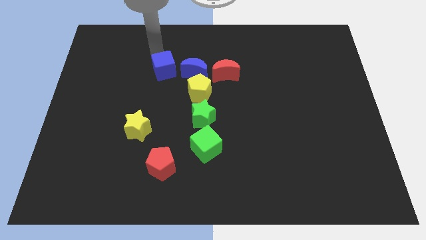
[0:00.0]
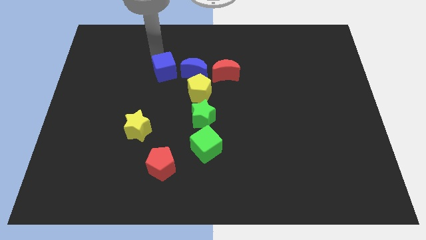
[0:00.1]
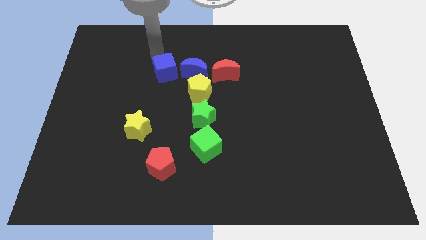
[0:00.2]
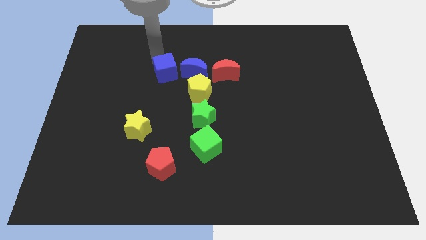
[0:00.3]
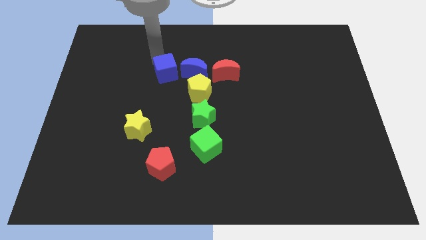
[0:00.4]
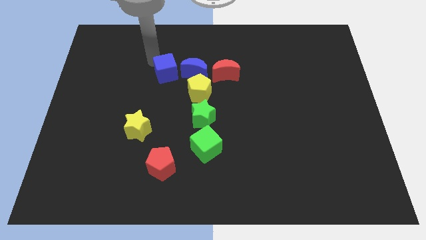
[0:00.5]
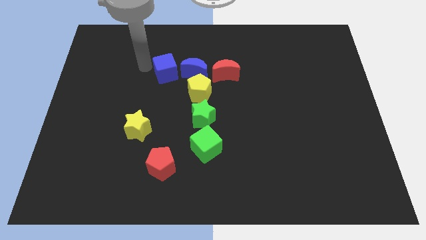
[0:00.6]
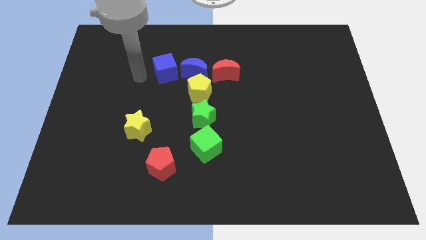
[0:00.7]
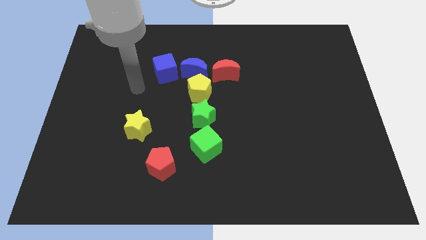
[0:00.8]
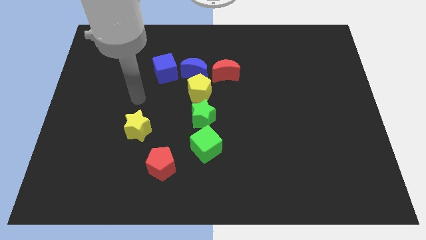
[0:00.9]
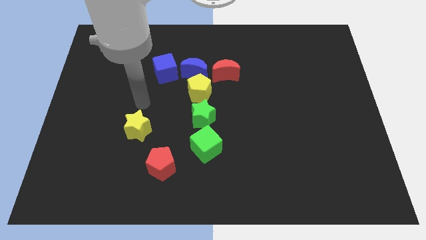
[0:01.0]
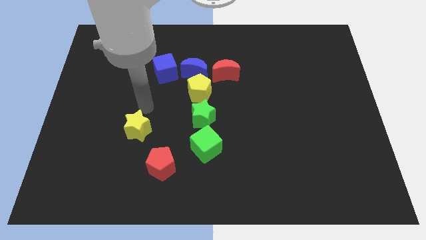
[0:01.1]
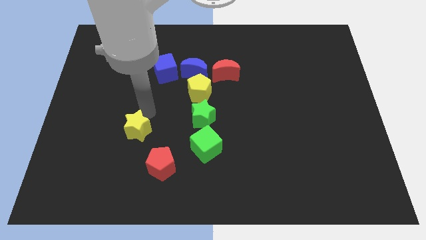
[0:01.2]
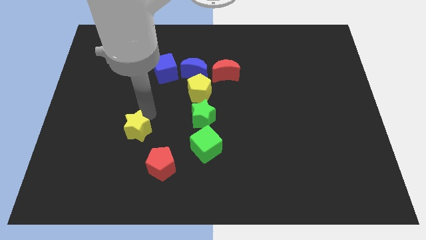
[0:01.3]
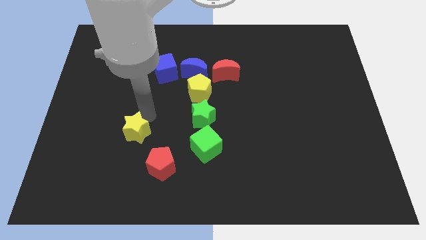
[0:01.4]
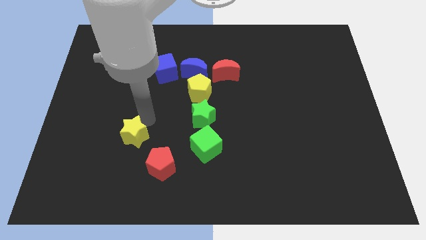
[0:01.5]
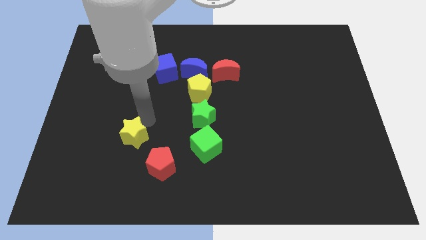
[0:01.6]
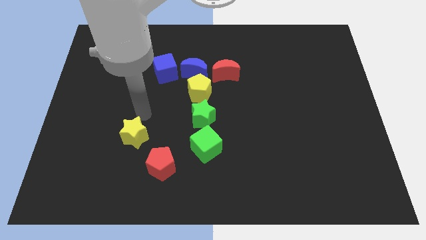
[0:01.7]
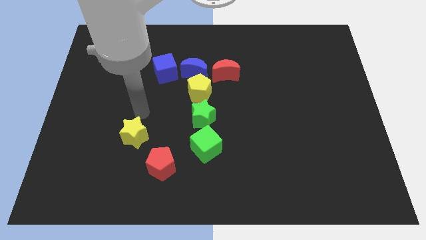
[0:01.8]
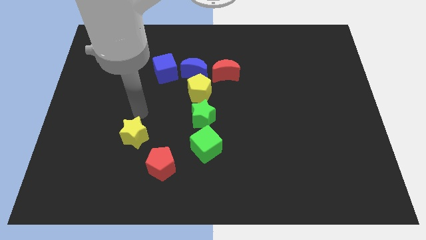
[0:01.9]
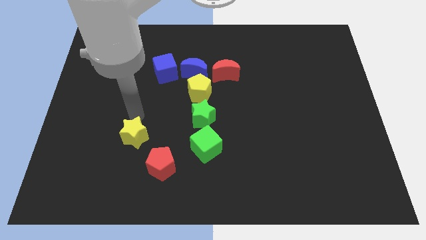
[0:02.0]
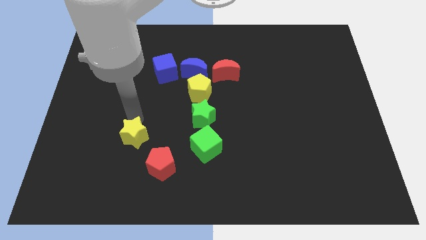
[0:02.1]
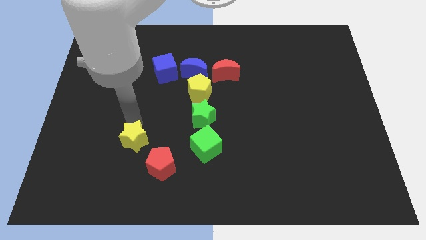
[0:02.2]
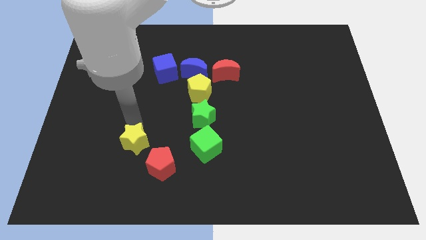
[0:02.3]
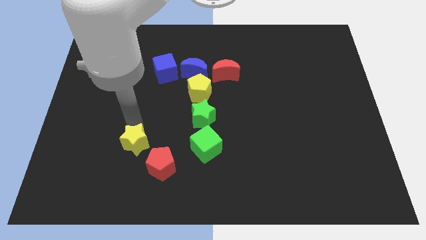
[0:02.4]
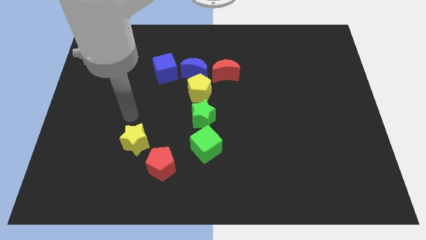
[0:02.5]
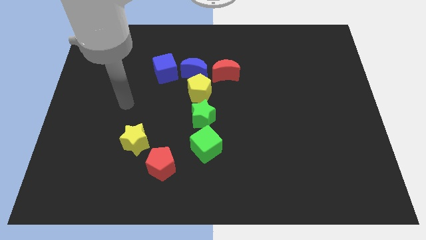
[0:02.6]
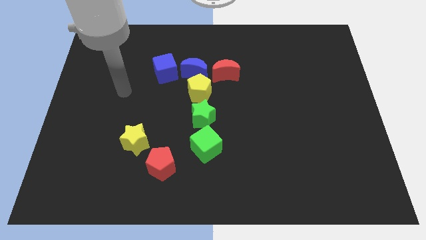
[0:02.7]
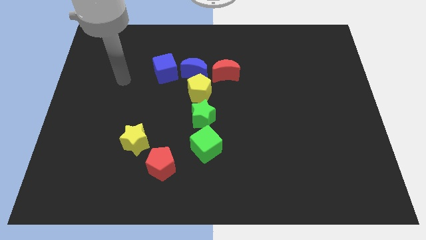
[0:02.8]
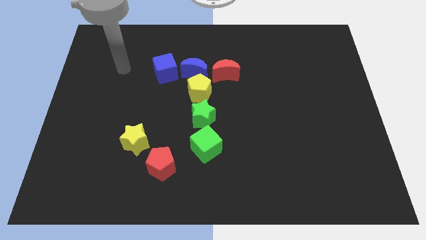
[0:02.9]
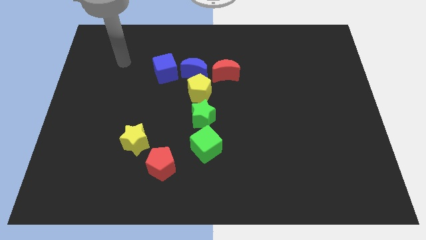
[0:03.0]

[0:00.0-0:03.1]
push the yellow star towards the bottom side of the board

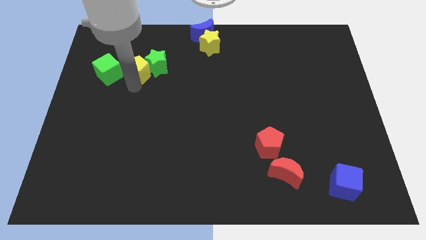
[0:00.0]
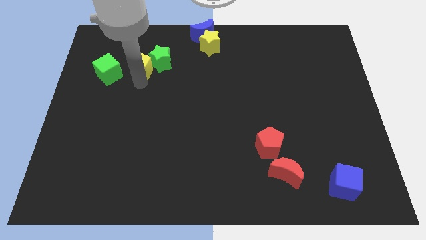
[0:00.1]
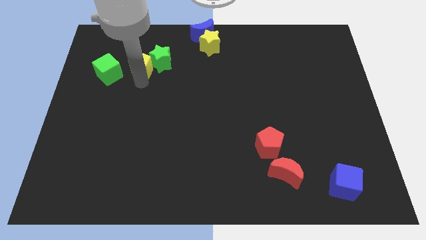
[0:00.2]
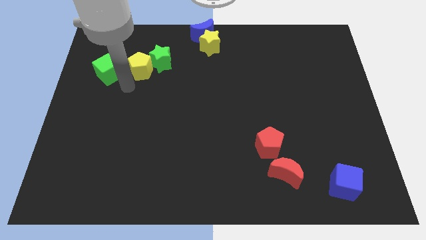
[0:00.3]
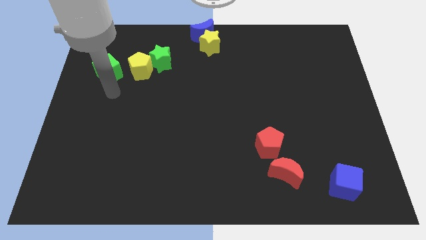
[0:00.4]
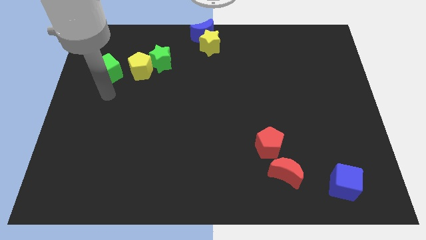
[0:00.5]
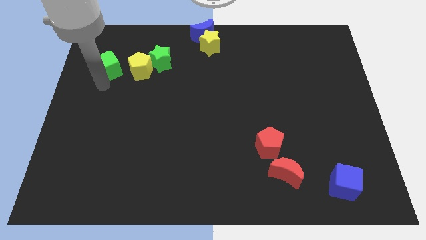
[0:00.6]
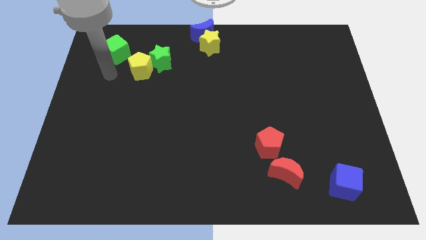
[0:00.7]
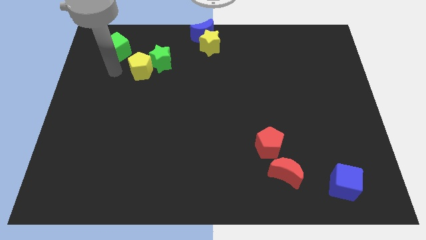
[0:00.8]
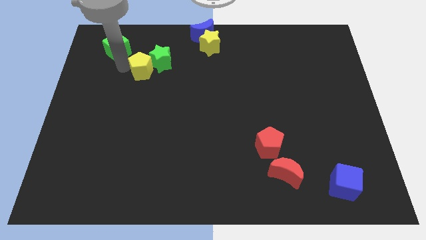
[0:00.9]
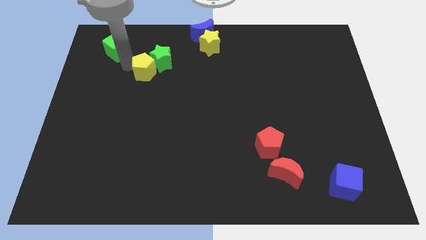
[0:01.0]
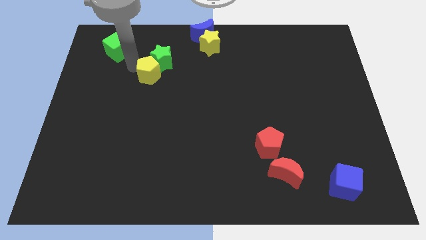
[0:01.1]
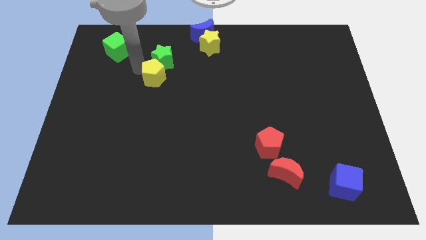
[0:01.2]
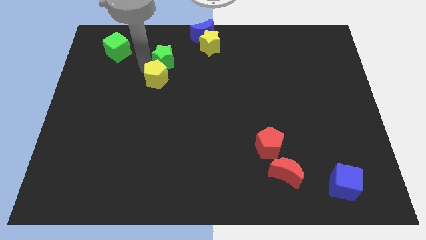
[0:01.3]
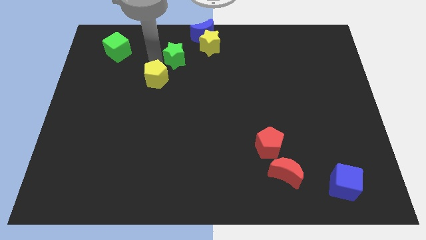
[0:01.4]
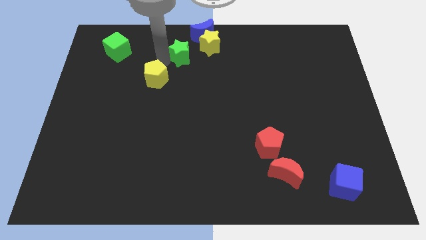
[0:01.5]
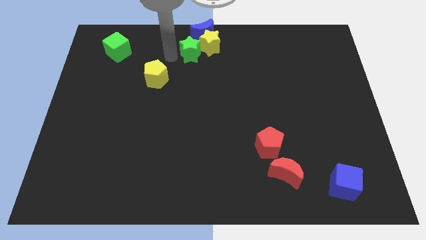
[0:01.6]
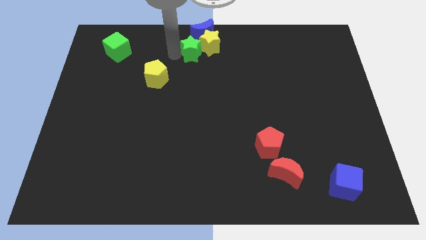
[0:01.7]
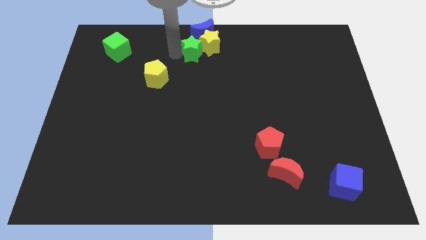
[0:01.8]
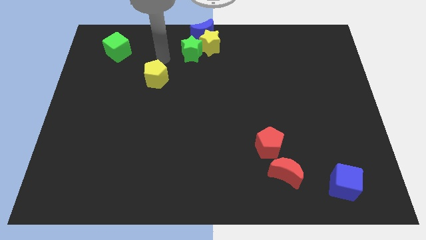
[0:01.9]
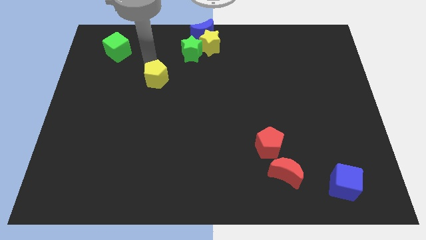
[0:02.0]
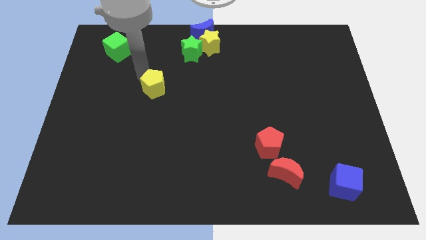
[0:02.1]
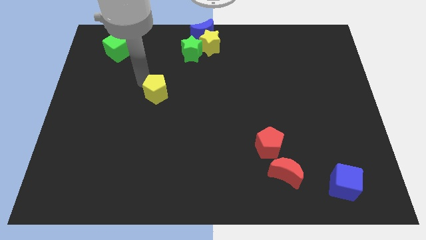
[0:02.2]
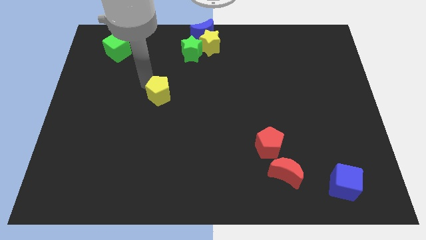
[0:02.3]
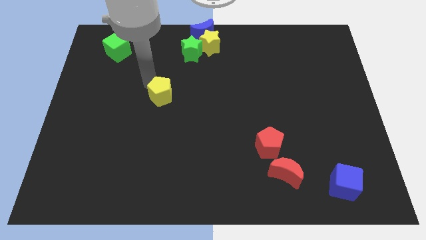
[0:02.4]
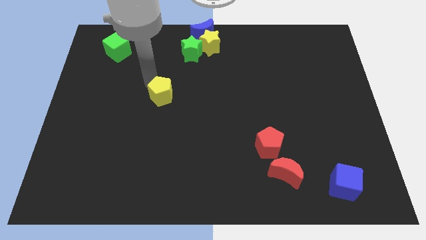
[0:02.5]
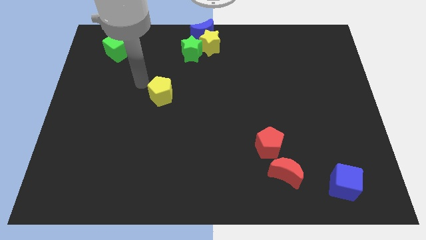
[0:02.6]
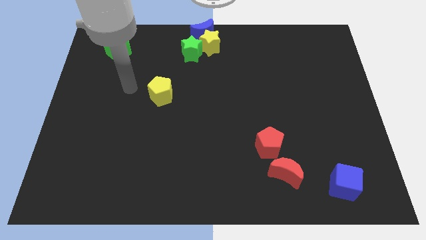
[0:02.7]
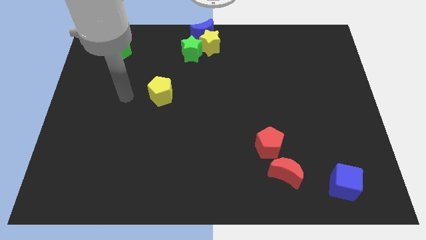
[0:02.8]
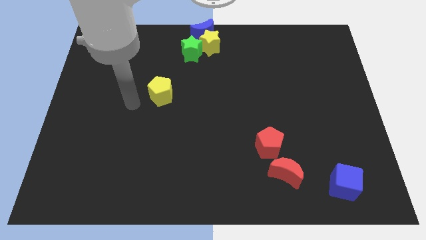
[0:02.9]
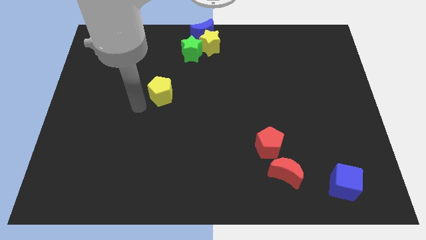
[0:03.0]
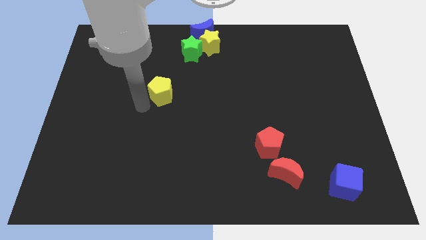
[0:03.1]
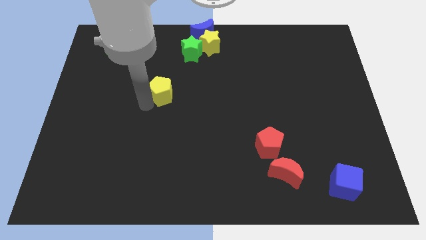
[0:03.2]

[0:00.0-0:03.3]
make a triangle out of green blocks and the yellow pentagon

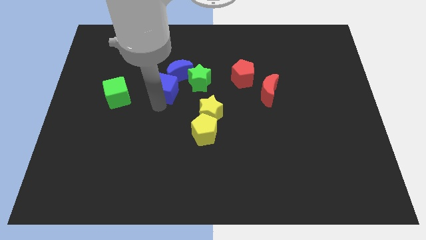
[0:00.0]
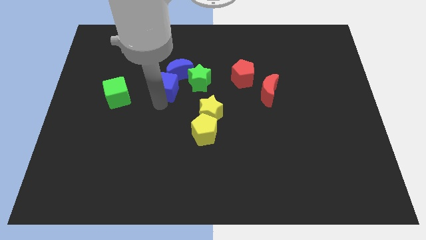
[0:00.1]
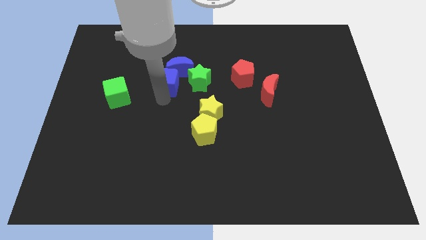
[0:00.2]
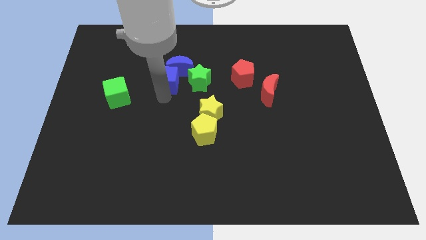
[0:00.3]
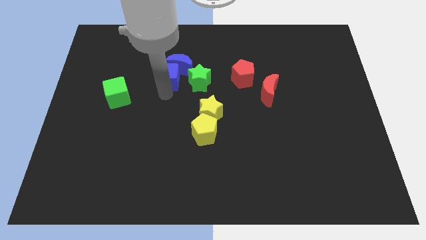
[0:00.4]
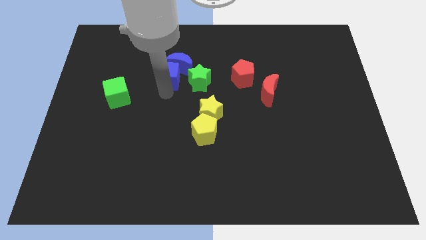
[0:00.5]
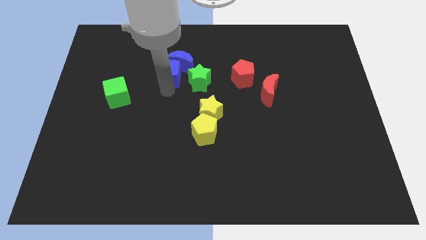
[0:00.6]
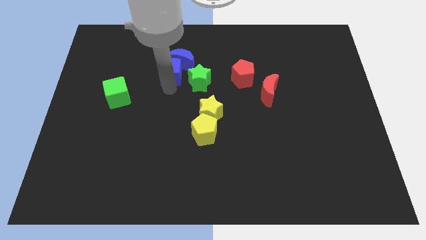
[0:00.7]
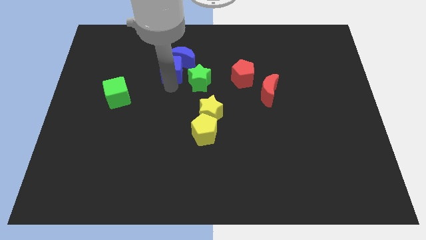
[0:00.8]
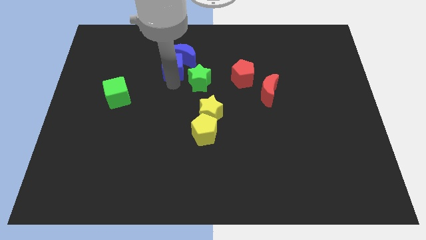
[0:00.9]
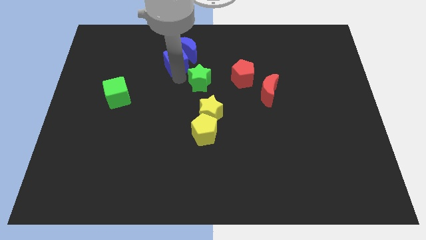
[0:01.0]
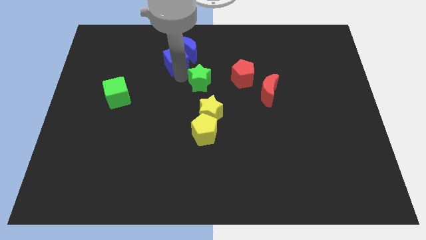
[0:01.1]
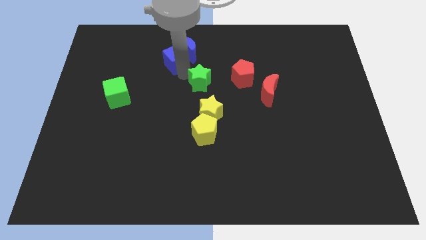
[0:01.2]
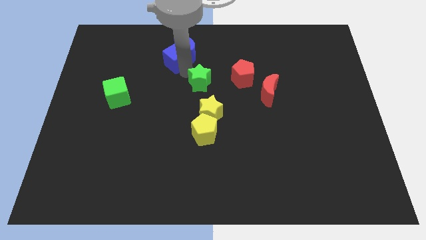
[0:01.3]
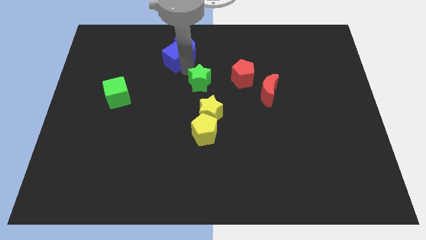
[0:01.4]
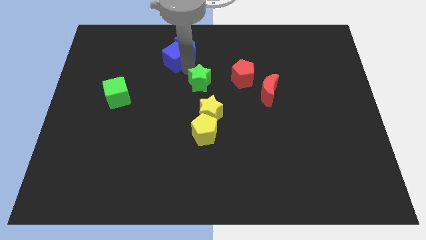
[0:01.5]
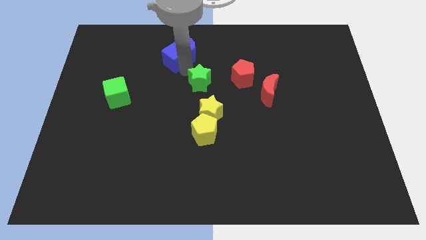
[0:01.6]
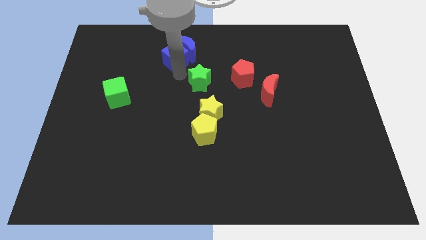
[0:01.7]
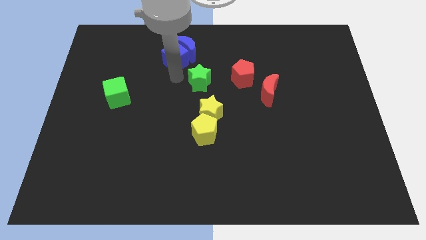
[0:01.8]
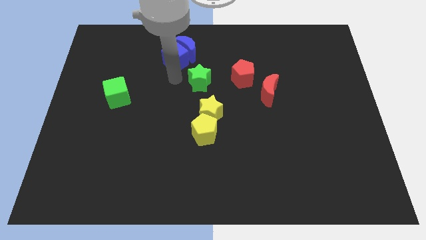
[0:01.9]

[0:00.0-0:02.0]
push blue cube and the blue moon towards up

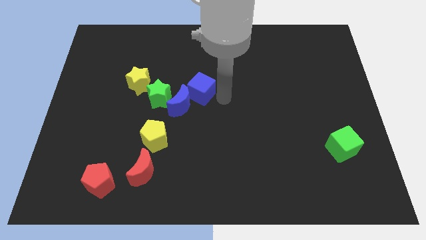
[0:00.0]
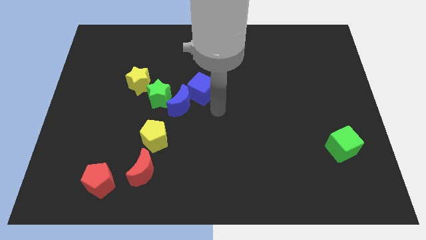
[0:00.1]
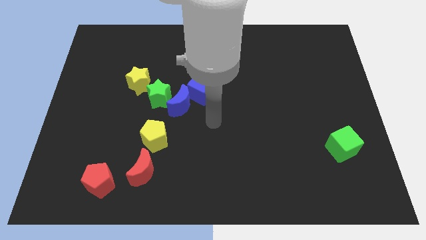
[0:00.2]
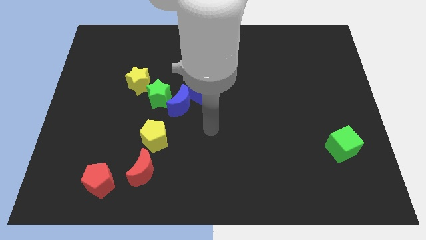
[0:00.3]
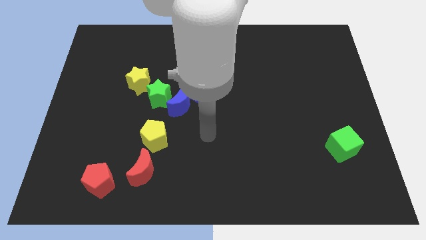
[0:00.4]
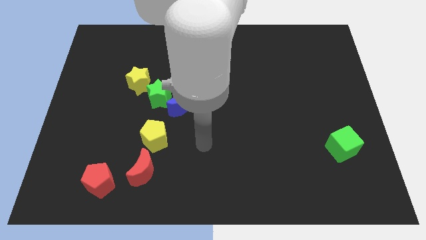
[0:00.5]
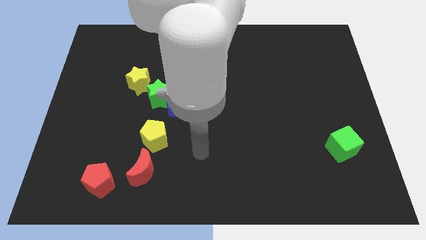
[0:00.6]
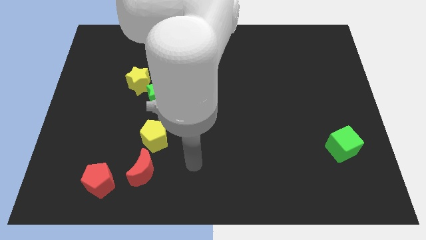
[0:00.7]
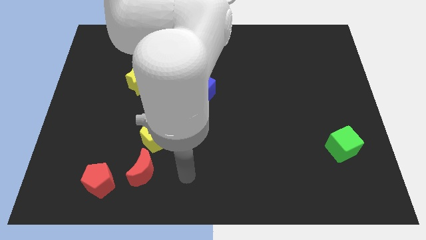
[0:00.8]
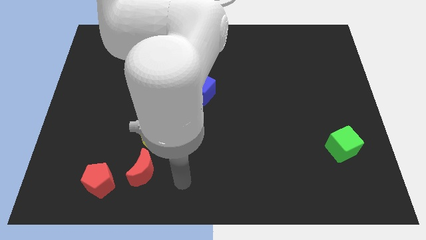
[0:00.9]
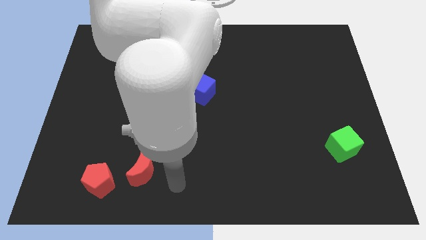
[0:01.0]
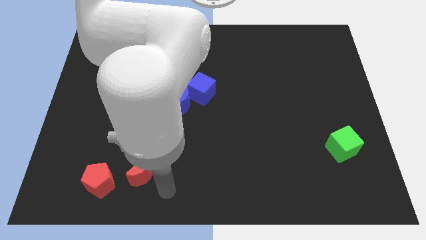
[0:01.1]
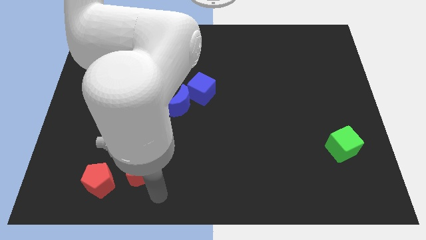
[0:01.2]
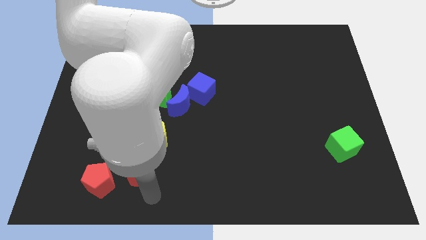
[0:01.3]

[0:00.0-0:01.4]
move your arm away from blue cube
